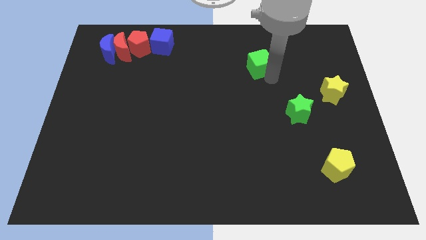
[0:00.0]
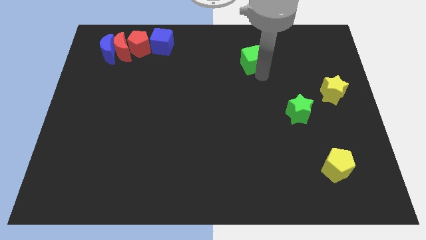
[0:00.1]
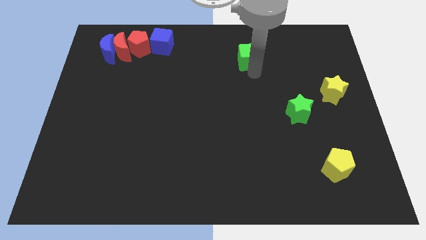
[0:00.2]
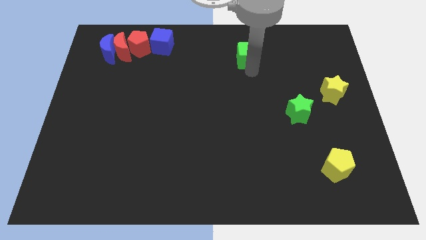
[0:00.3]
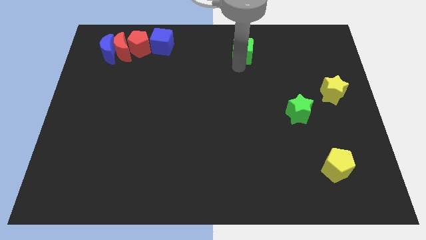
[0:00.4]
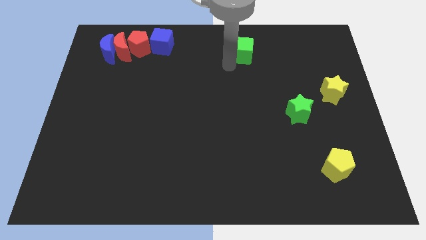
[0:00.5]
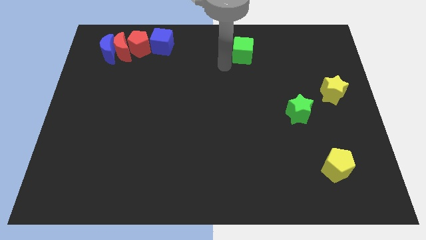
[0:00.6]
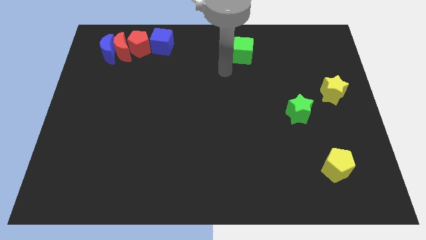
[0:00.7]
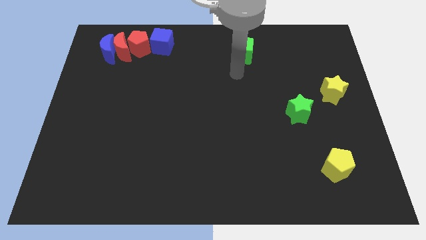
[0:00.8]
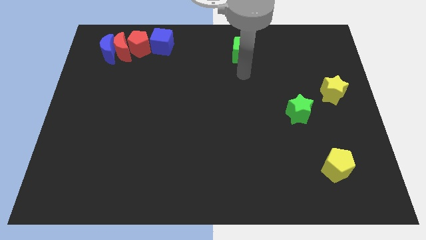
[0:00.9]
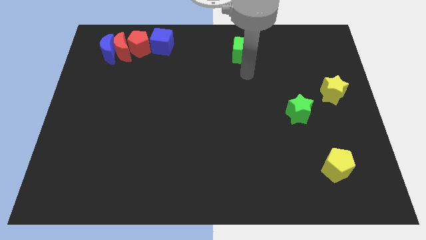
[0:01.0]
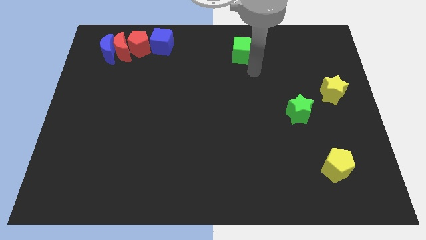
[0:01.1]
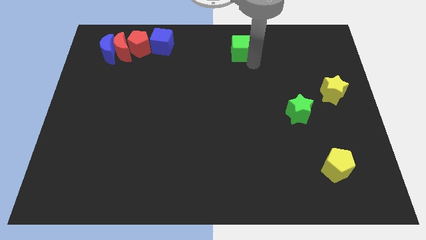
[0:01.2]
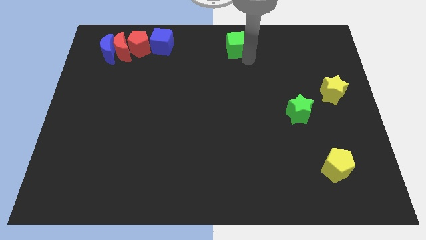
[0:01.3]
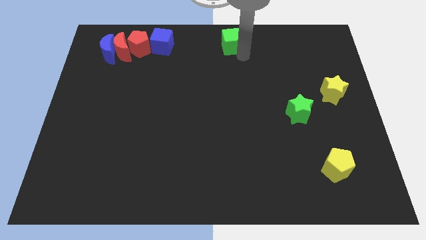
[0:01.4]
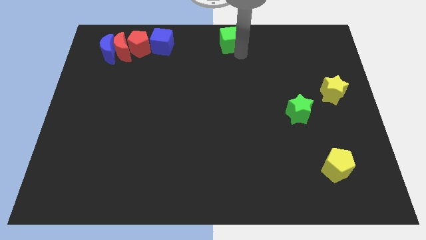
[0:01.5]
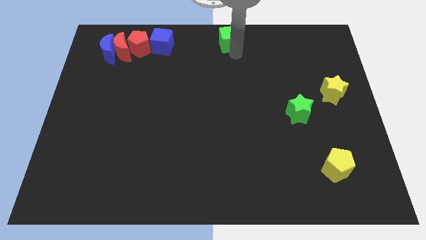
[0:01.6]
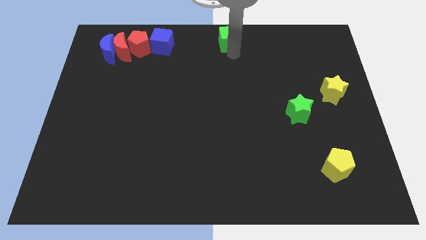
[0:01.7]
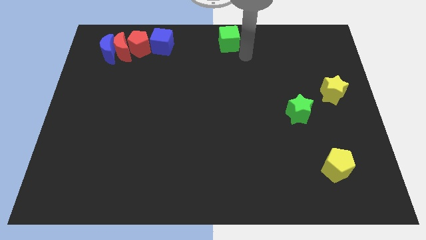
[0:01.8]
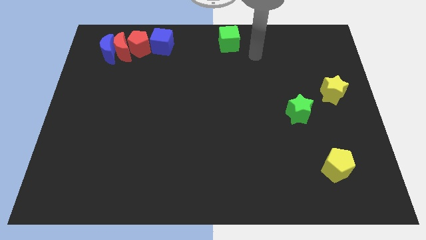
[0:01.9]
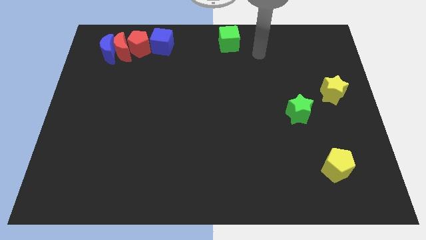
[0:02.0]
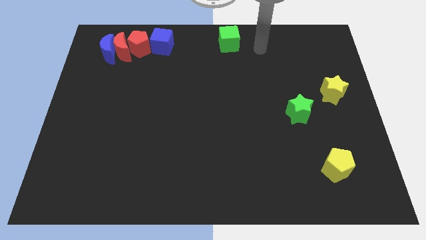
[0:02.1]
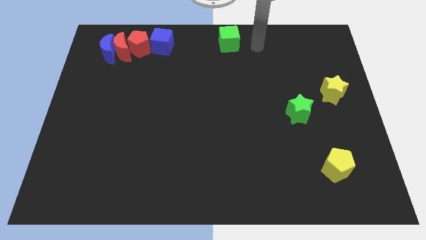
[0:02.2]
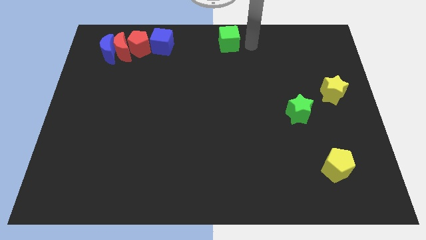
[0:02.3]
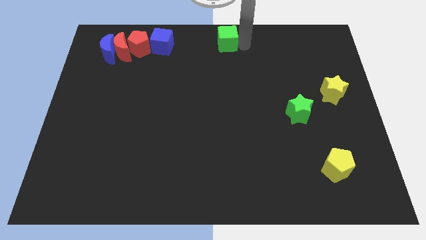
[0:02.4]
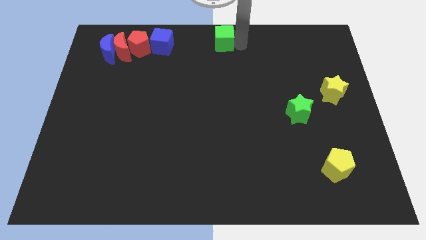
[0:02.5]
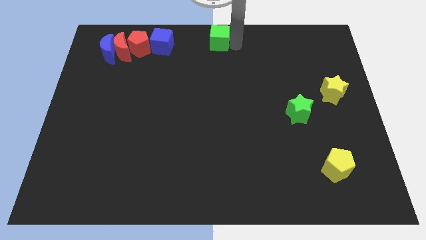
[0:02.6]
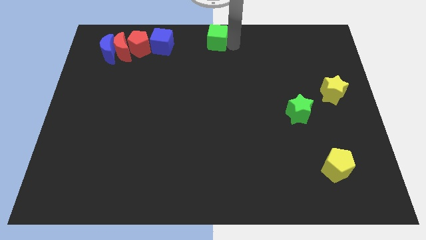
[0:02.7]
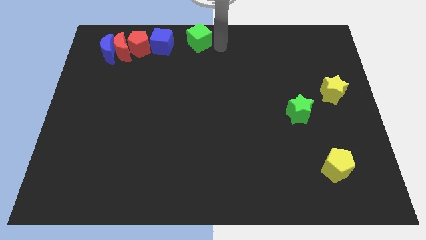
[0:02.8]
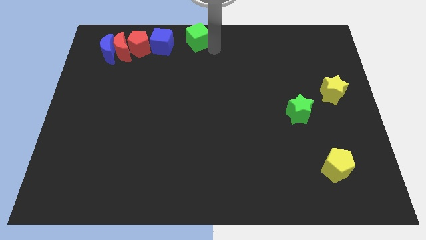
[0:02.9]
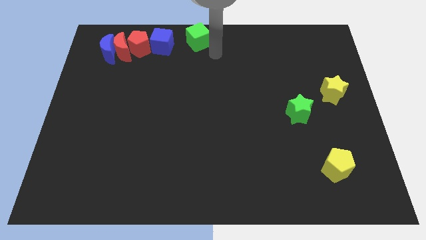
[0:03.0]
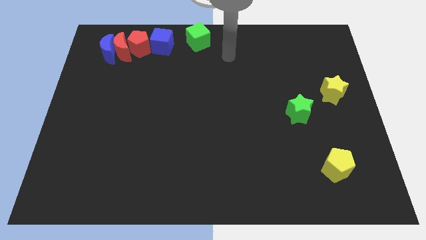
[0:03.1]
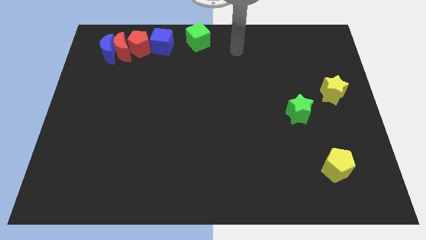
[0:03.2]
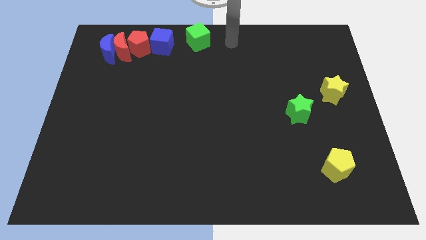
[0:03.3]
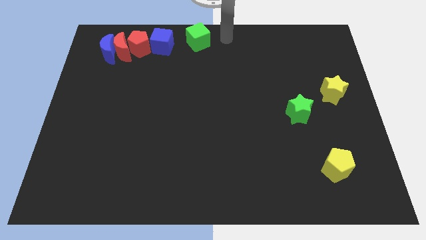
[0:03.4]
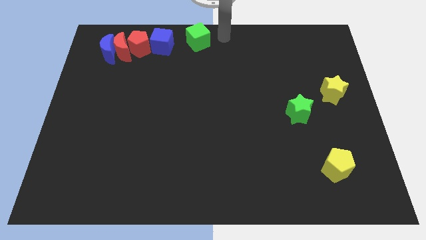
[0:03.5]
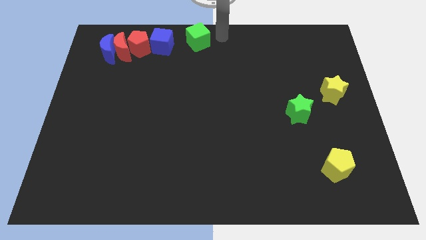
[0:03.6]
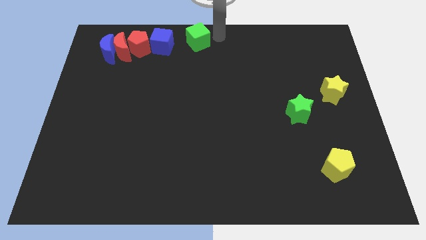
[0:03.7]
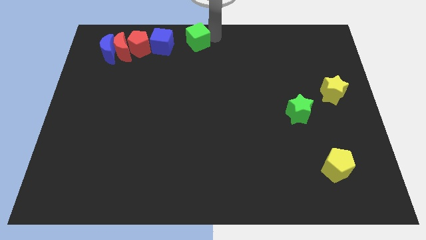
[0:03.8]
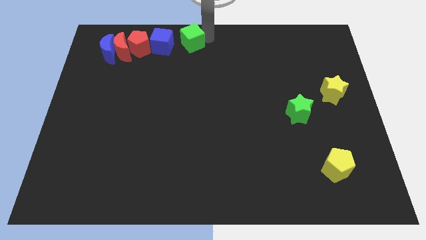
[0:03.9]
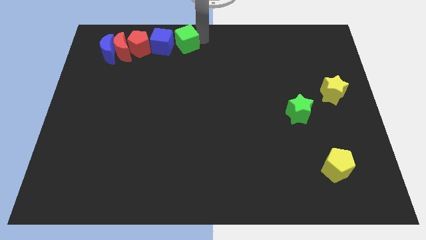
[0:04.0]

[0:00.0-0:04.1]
move green cube close to blue cube

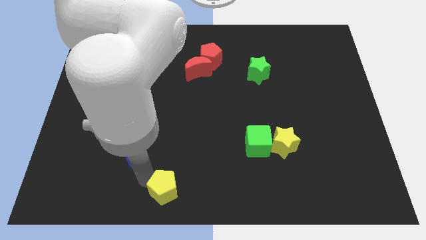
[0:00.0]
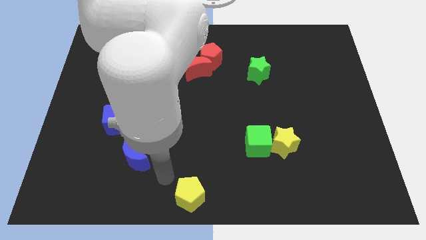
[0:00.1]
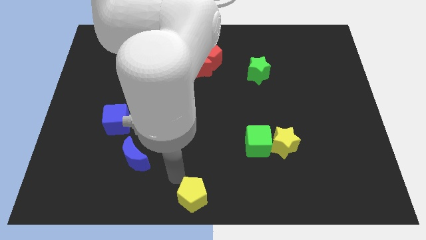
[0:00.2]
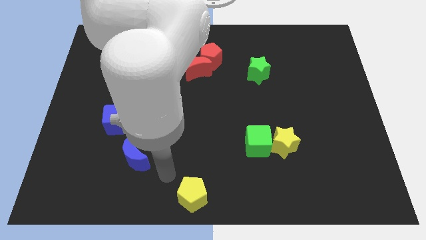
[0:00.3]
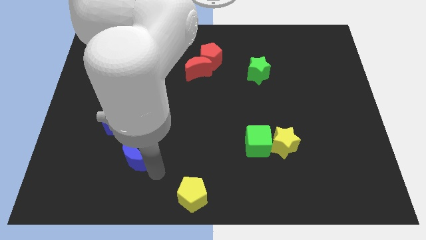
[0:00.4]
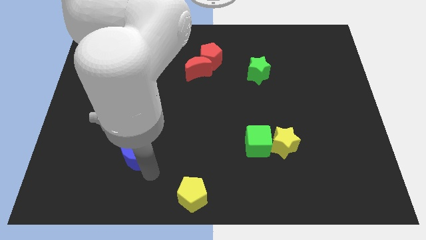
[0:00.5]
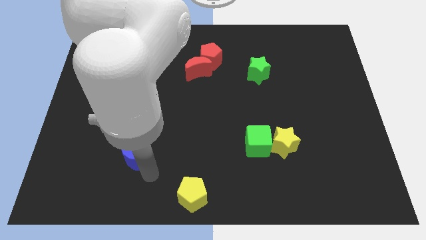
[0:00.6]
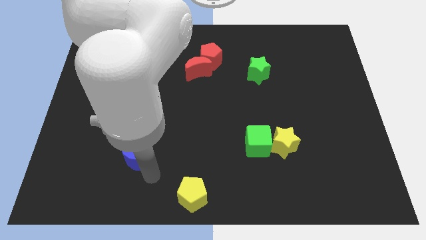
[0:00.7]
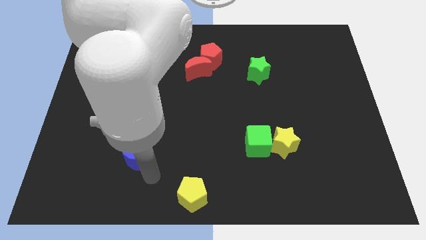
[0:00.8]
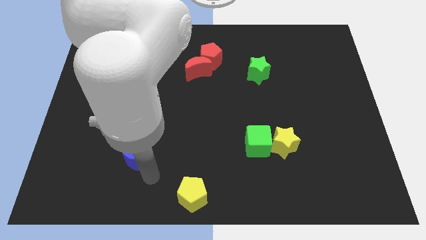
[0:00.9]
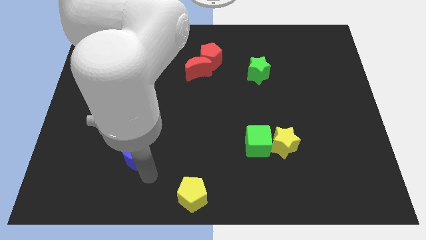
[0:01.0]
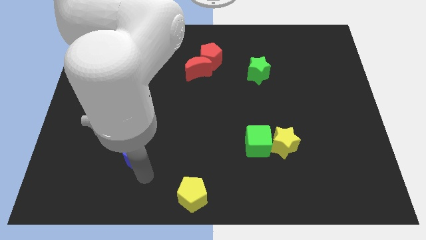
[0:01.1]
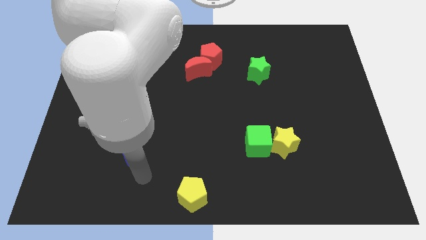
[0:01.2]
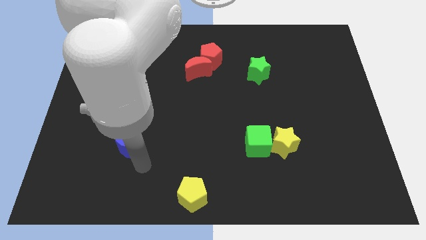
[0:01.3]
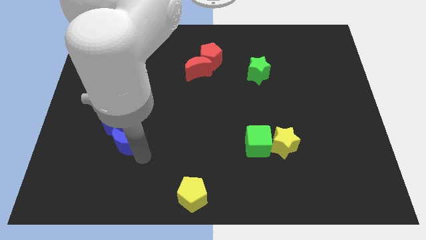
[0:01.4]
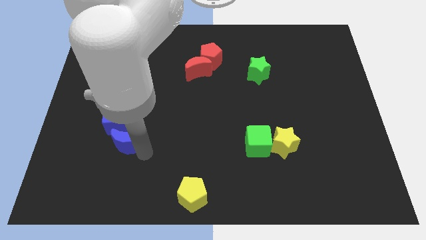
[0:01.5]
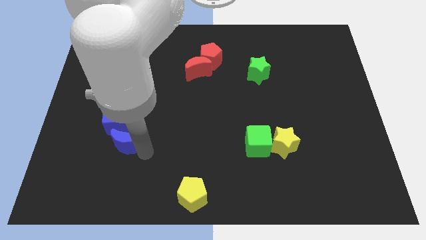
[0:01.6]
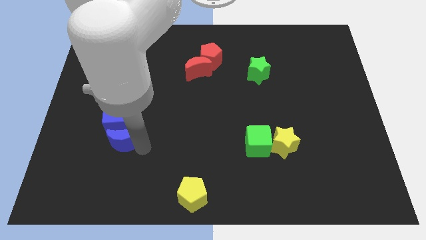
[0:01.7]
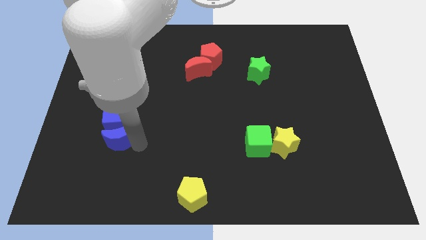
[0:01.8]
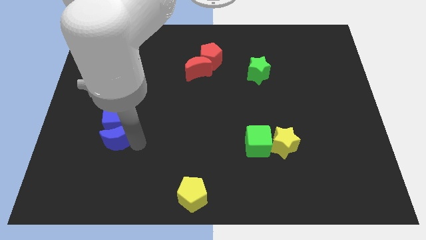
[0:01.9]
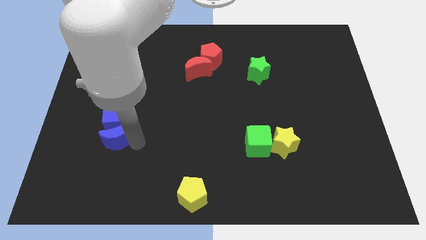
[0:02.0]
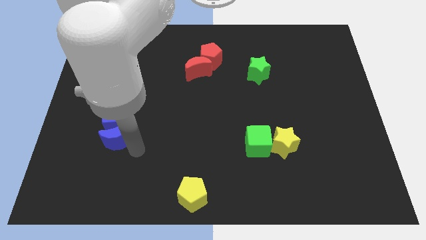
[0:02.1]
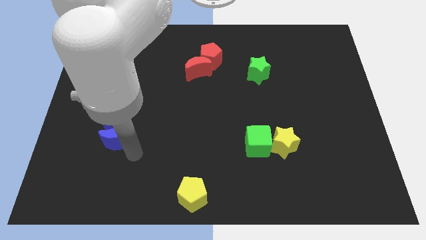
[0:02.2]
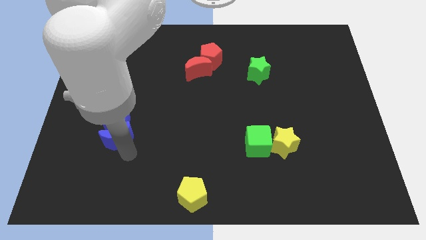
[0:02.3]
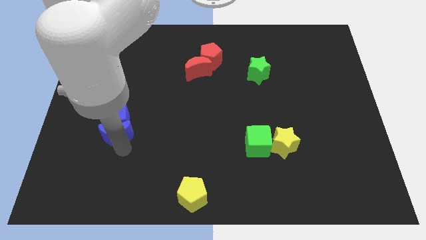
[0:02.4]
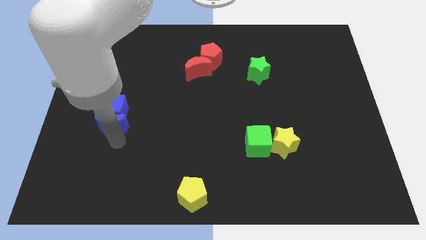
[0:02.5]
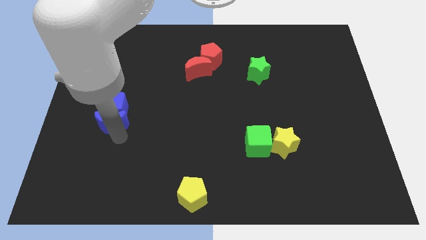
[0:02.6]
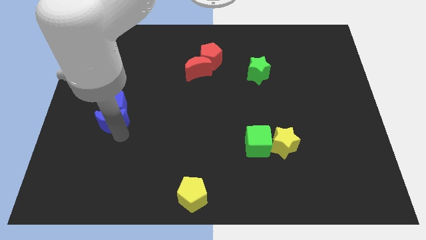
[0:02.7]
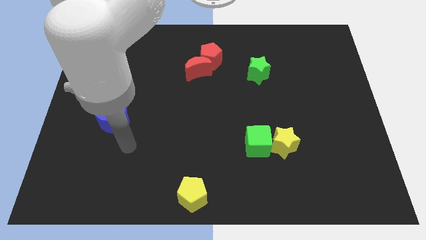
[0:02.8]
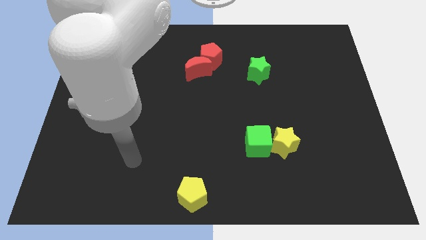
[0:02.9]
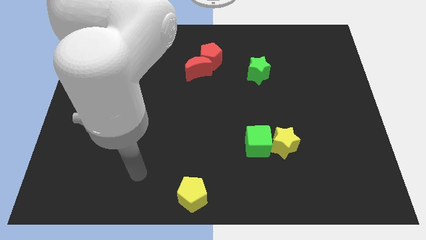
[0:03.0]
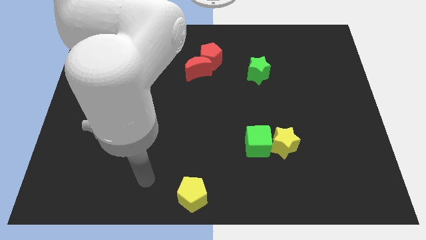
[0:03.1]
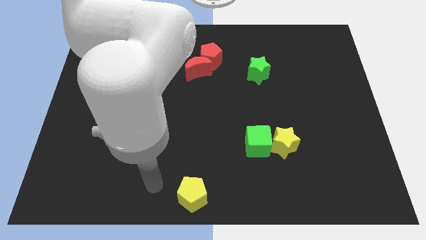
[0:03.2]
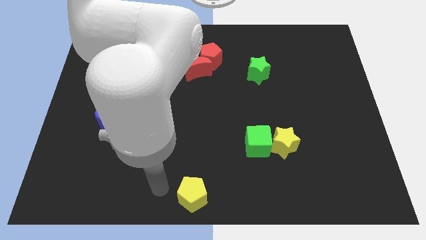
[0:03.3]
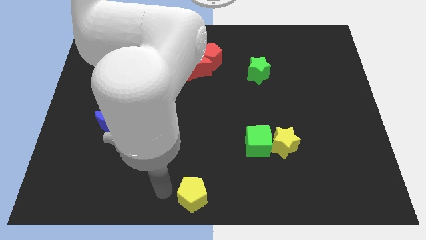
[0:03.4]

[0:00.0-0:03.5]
push the blue moon into the blue cube

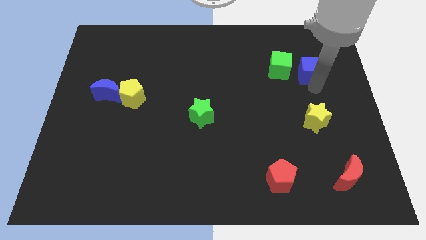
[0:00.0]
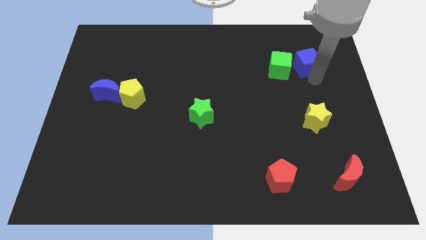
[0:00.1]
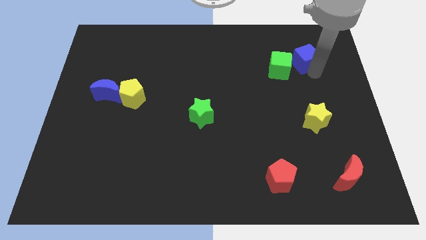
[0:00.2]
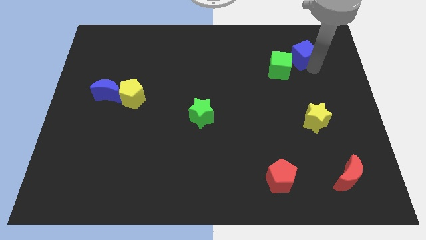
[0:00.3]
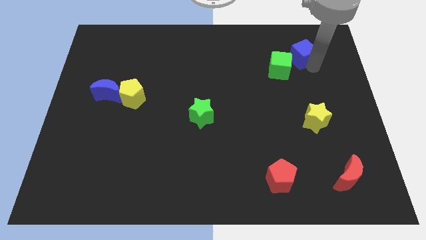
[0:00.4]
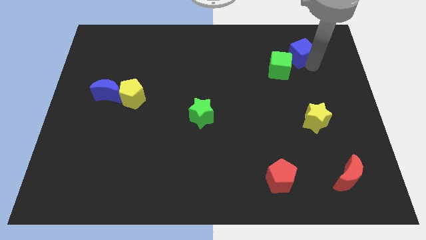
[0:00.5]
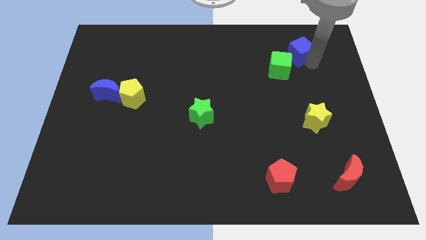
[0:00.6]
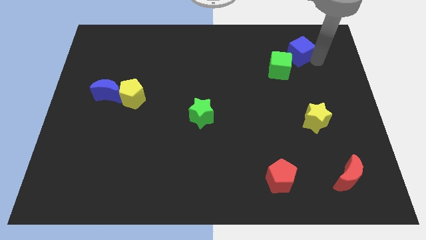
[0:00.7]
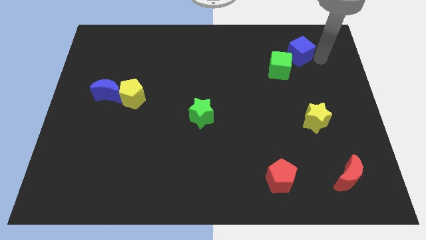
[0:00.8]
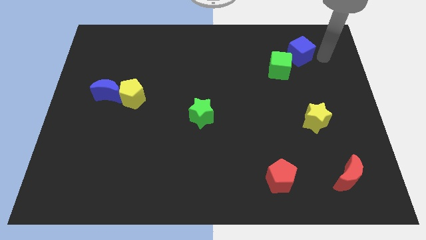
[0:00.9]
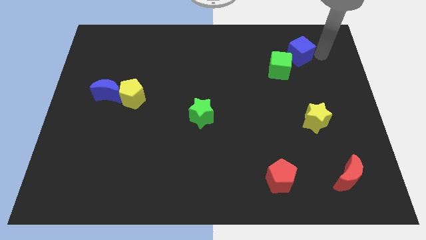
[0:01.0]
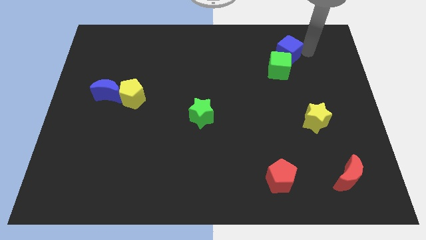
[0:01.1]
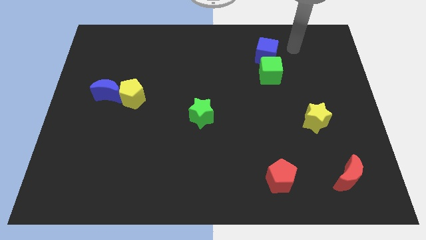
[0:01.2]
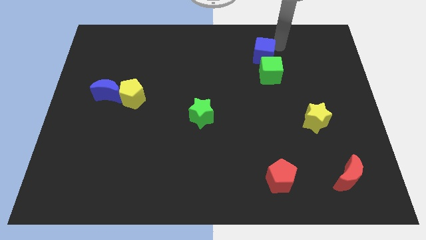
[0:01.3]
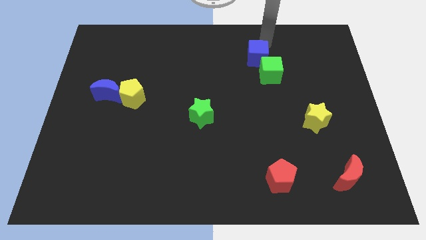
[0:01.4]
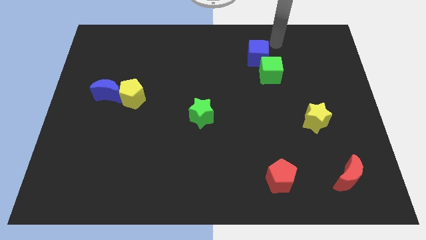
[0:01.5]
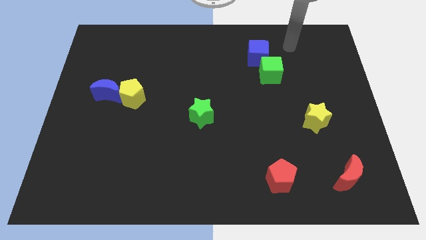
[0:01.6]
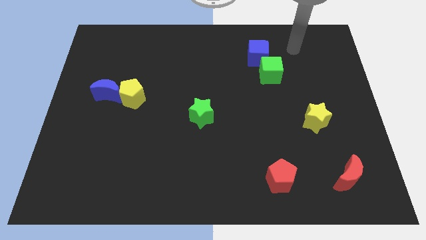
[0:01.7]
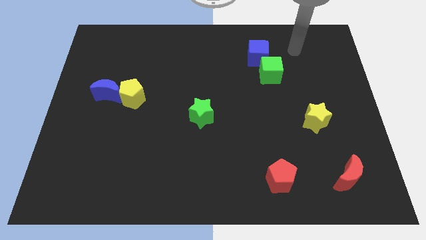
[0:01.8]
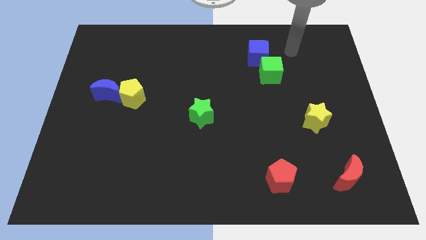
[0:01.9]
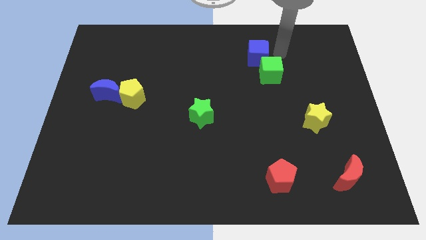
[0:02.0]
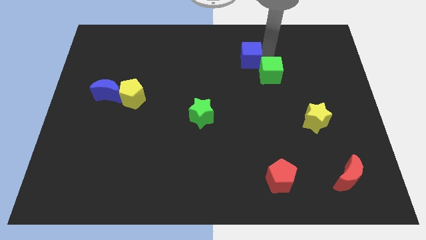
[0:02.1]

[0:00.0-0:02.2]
place the blue cube to the top left of the green cube
